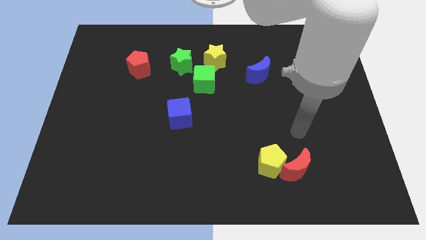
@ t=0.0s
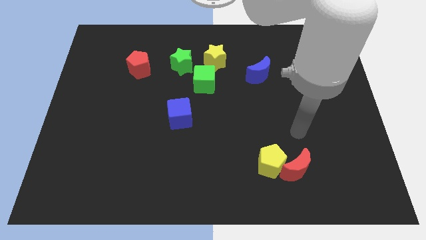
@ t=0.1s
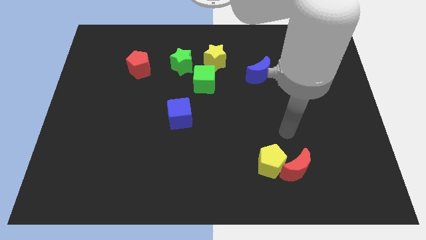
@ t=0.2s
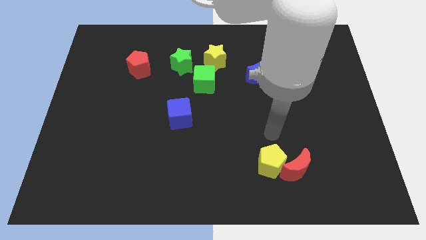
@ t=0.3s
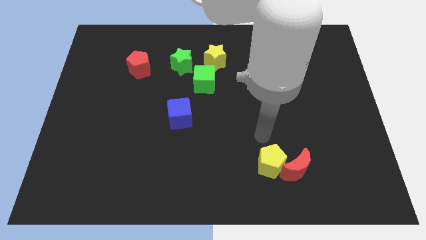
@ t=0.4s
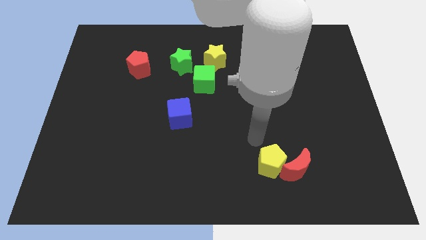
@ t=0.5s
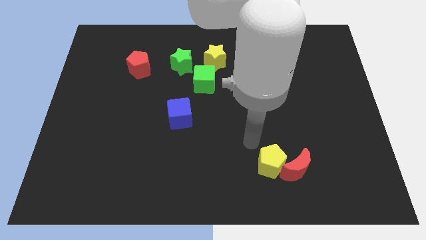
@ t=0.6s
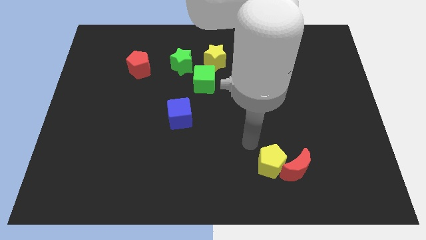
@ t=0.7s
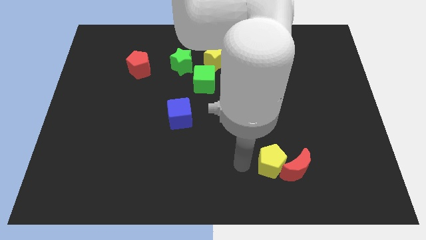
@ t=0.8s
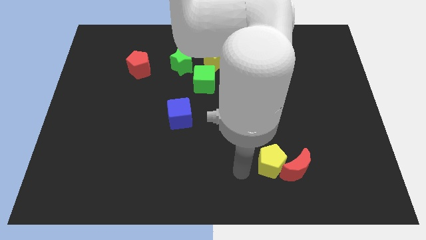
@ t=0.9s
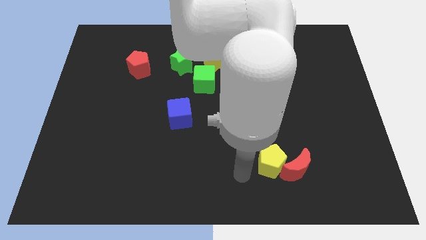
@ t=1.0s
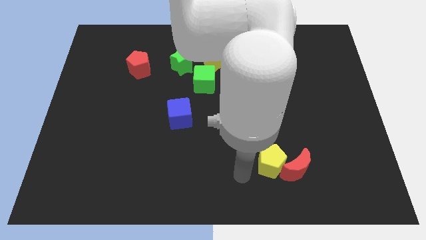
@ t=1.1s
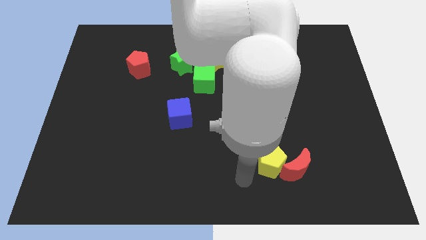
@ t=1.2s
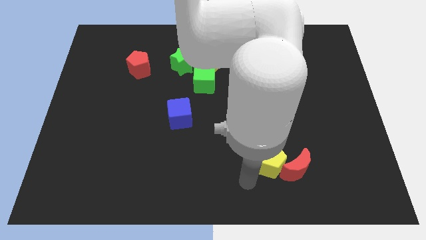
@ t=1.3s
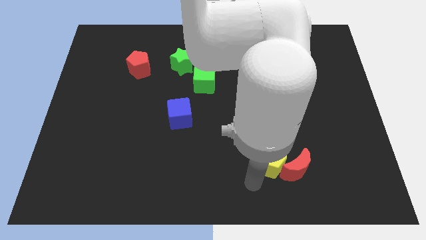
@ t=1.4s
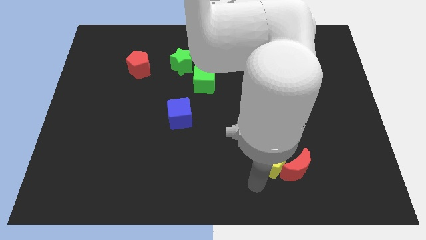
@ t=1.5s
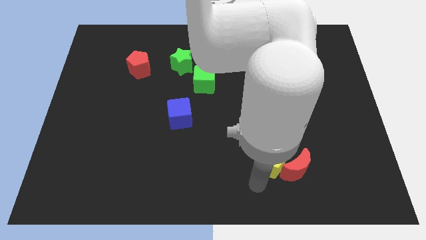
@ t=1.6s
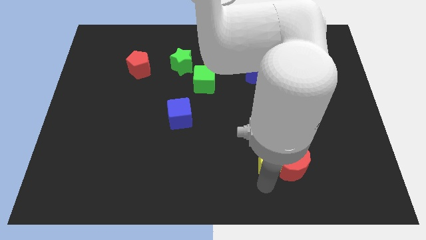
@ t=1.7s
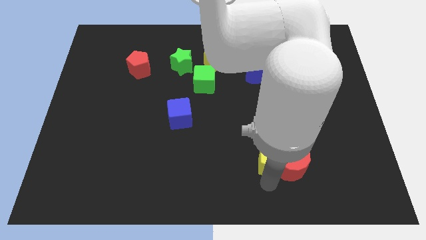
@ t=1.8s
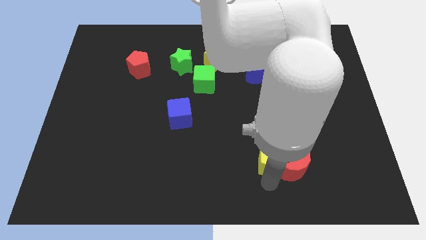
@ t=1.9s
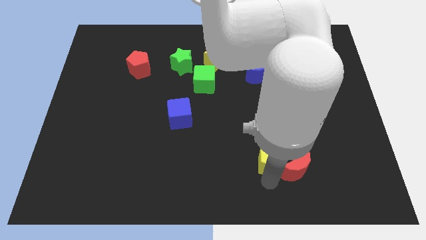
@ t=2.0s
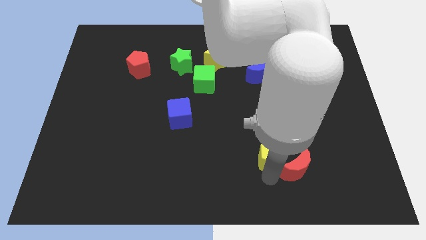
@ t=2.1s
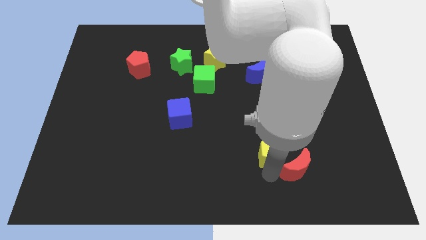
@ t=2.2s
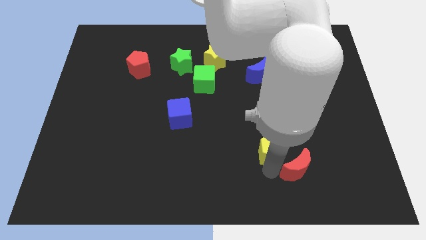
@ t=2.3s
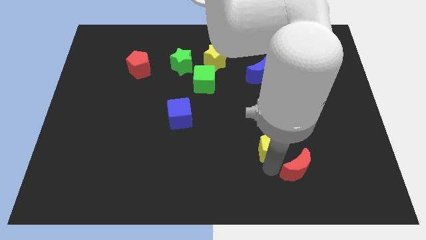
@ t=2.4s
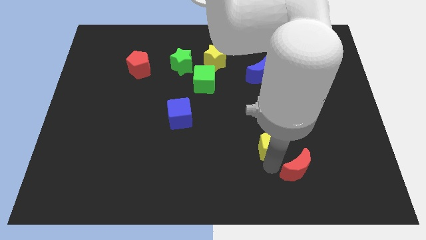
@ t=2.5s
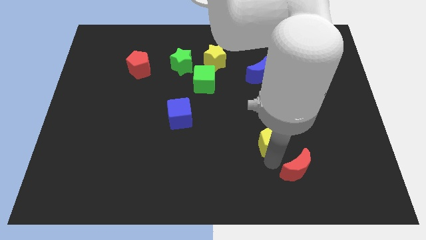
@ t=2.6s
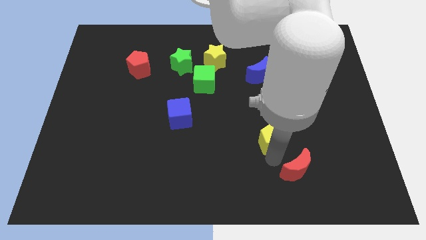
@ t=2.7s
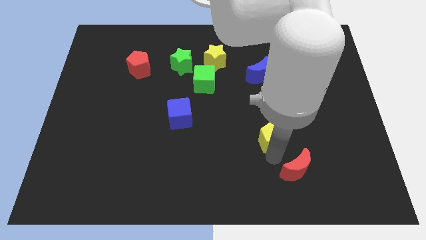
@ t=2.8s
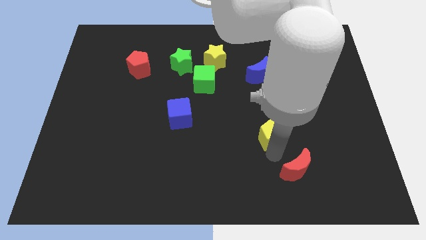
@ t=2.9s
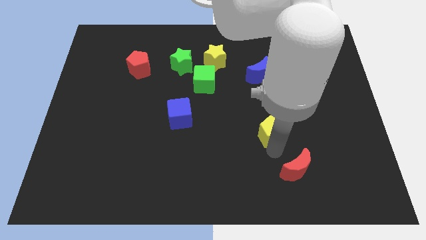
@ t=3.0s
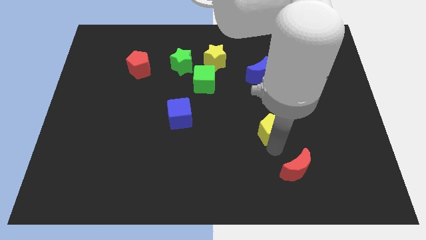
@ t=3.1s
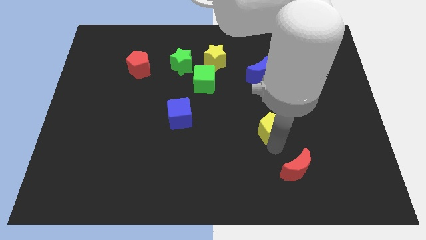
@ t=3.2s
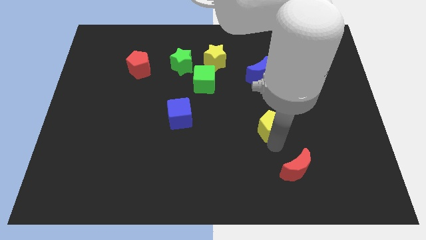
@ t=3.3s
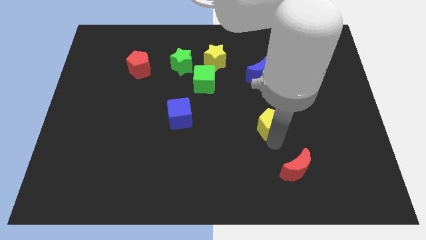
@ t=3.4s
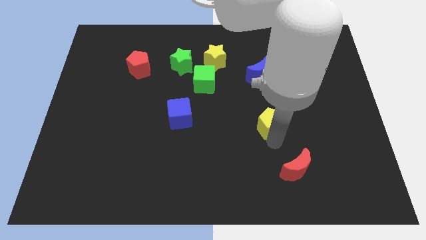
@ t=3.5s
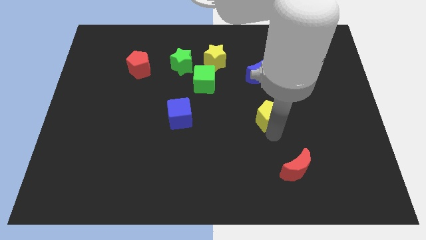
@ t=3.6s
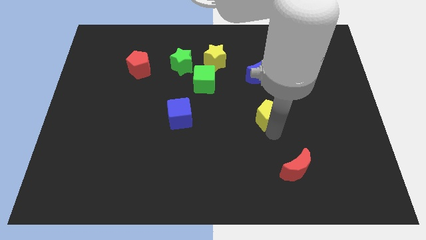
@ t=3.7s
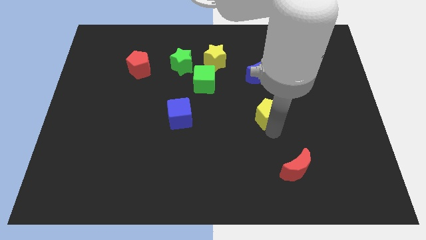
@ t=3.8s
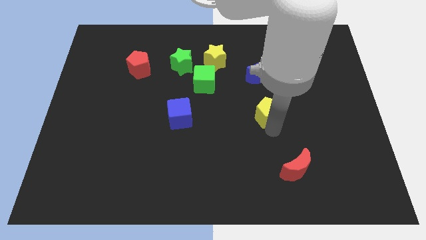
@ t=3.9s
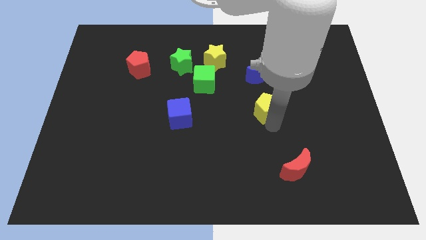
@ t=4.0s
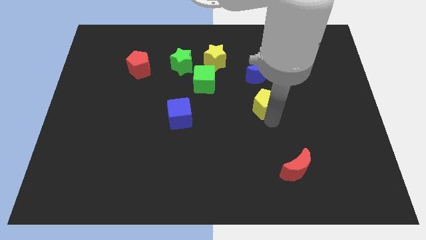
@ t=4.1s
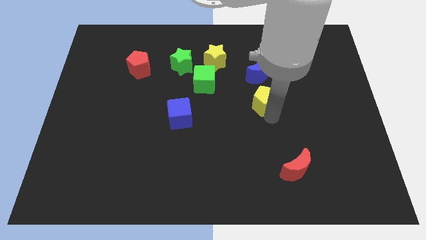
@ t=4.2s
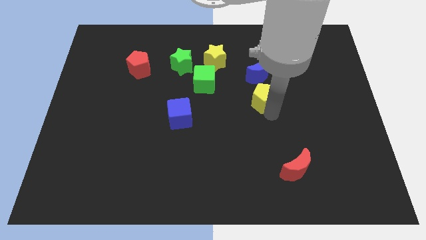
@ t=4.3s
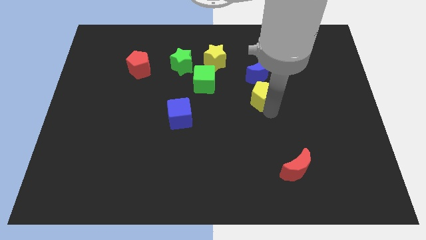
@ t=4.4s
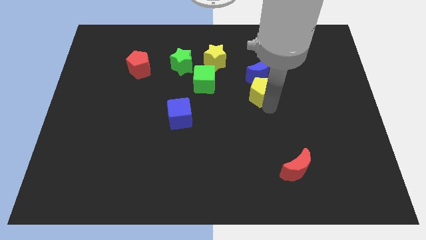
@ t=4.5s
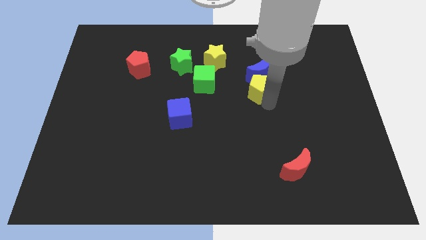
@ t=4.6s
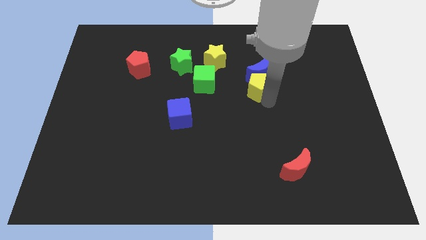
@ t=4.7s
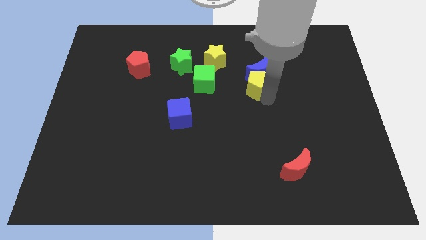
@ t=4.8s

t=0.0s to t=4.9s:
put the yellow pentagon towards the blue moon

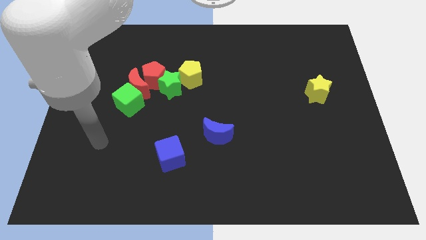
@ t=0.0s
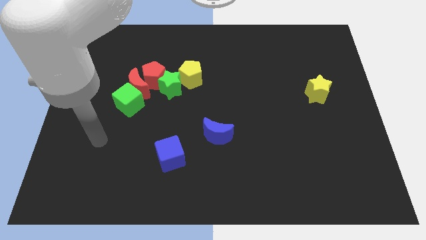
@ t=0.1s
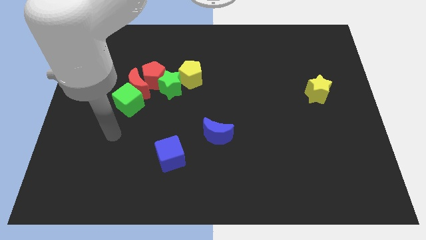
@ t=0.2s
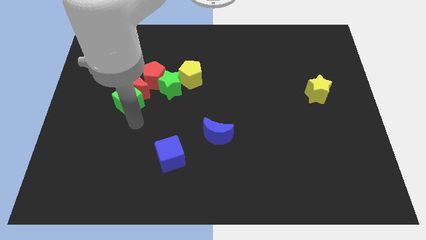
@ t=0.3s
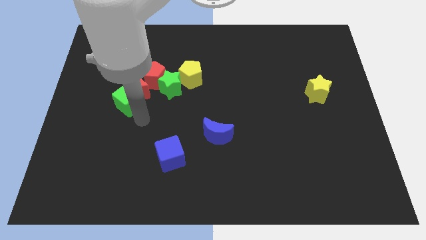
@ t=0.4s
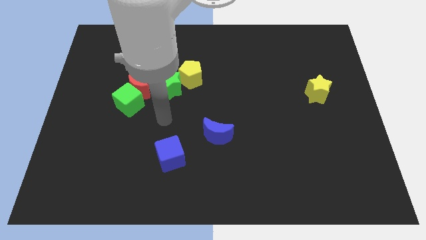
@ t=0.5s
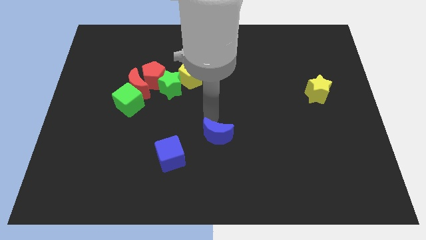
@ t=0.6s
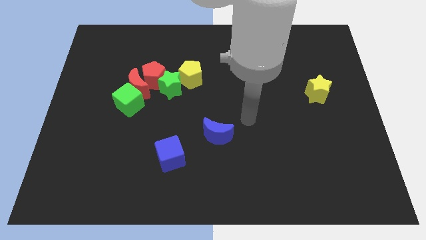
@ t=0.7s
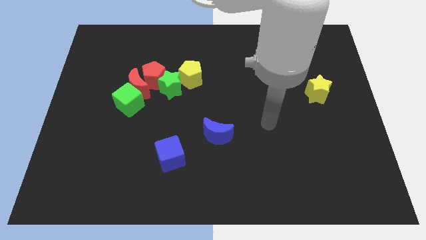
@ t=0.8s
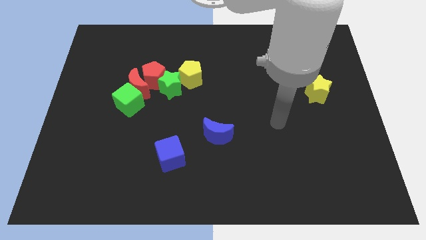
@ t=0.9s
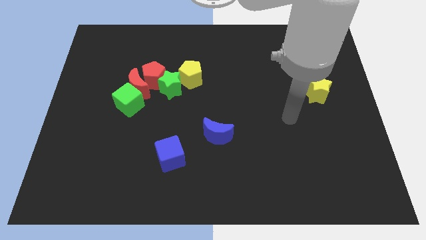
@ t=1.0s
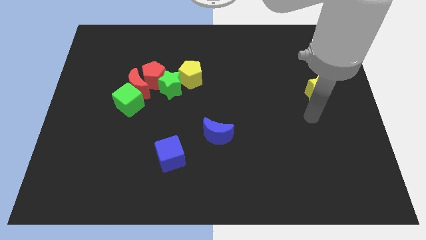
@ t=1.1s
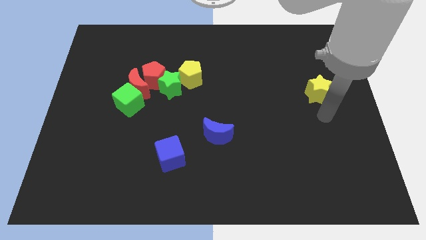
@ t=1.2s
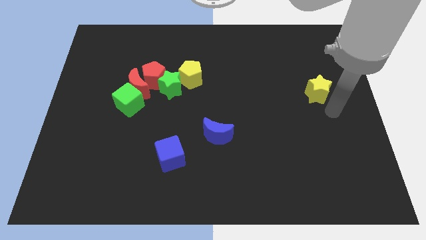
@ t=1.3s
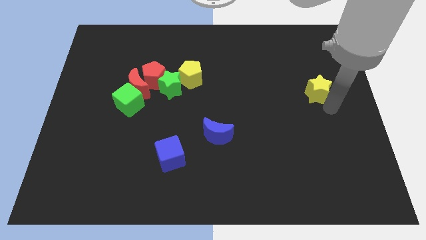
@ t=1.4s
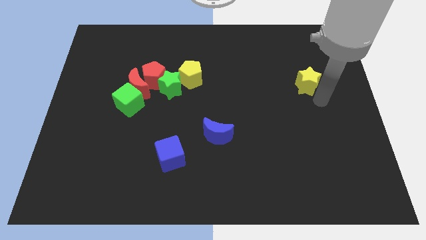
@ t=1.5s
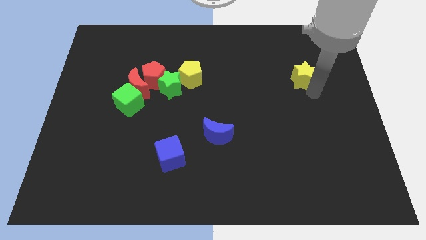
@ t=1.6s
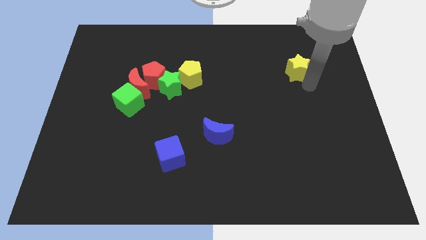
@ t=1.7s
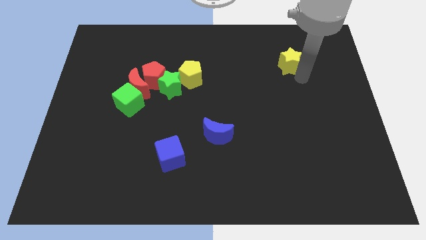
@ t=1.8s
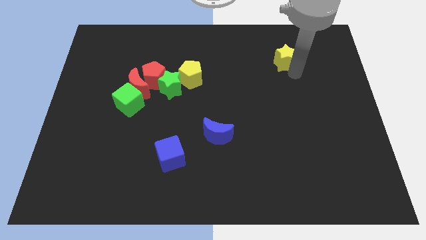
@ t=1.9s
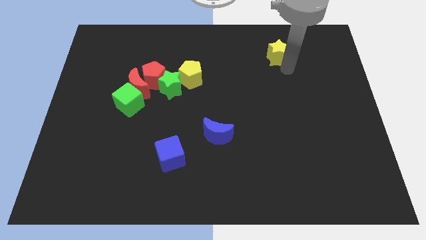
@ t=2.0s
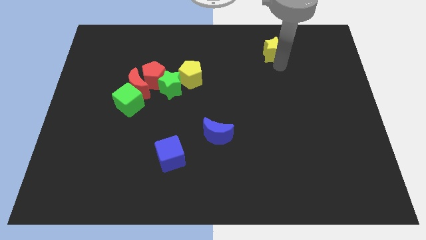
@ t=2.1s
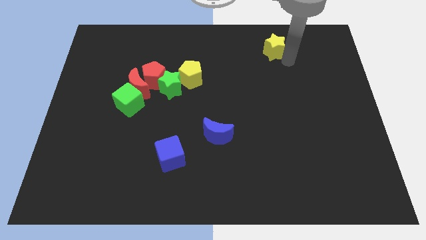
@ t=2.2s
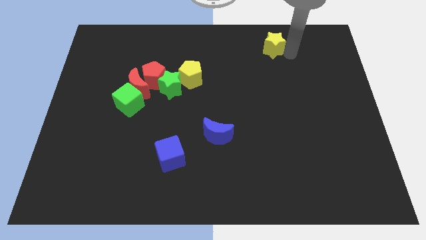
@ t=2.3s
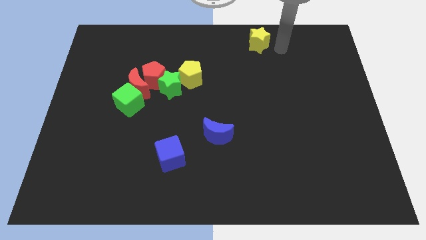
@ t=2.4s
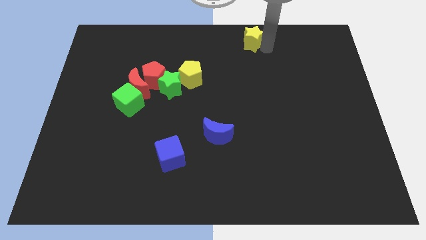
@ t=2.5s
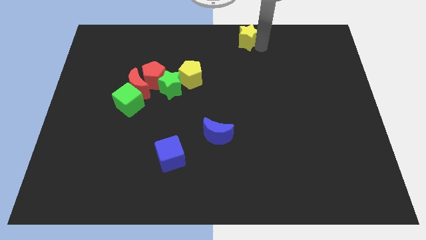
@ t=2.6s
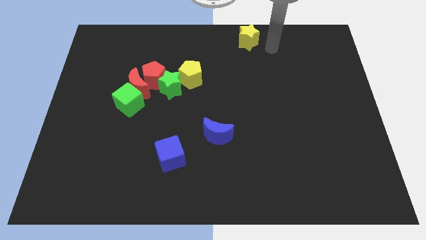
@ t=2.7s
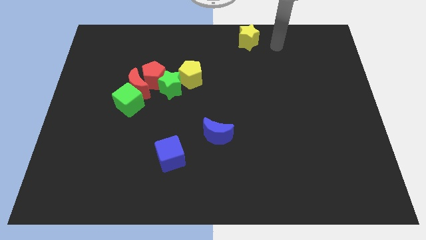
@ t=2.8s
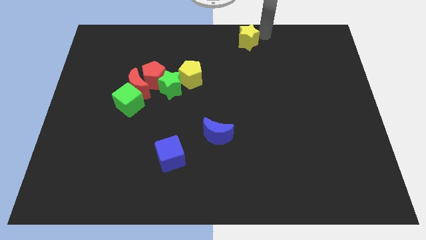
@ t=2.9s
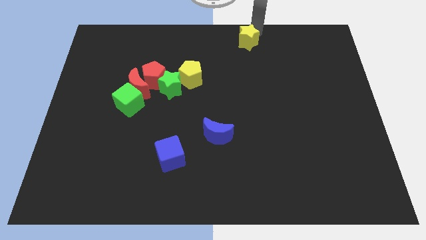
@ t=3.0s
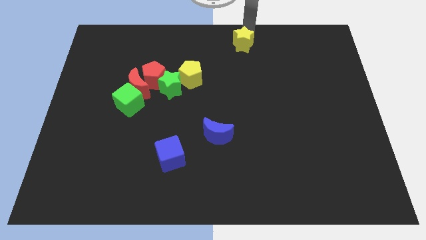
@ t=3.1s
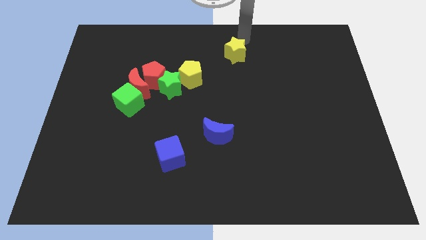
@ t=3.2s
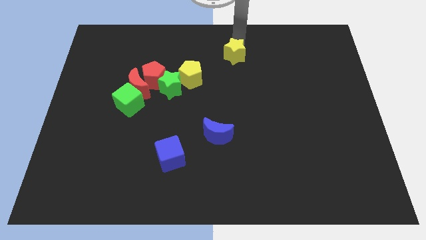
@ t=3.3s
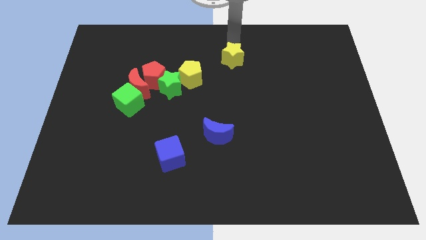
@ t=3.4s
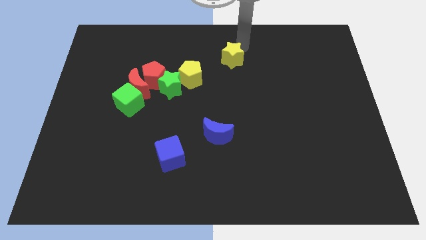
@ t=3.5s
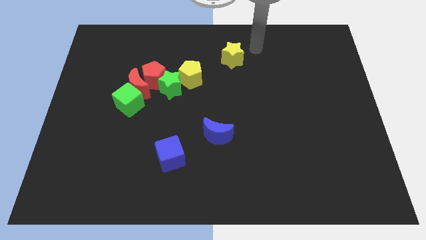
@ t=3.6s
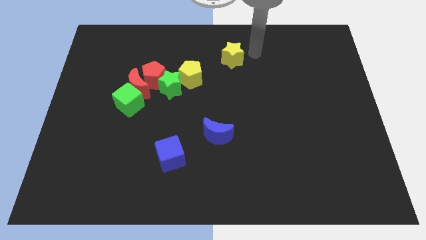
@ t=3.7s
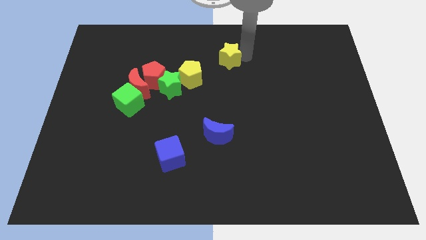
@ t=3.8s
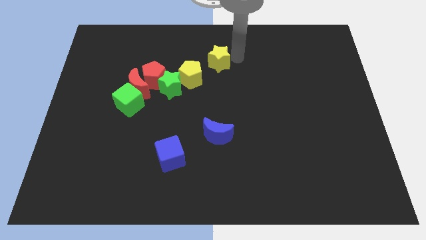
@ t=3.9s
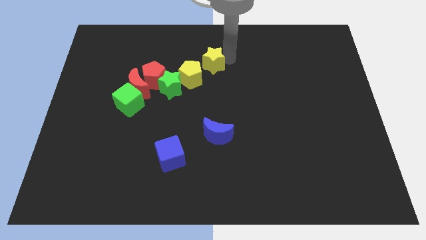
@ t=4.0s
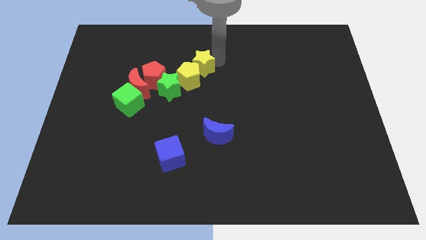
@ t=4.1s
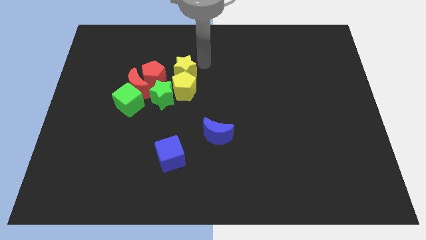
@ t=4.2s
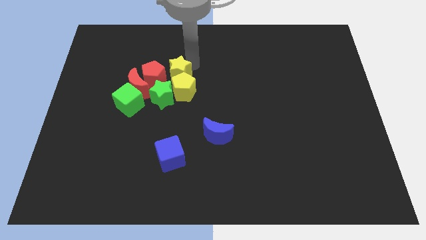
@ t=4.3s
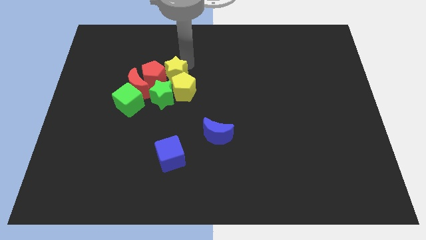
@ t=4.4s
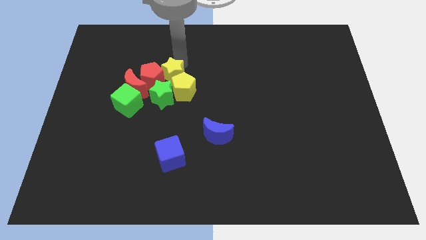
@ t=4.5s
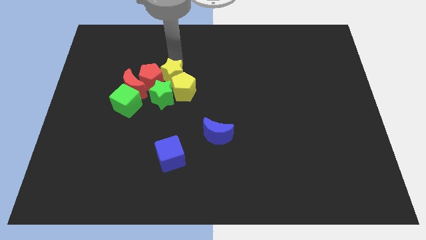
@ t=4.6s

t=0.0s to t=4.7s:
put the yellow star next to the red pentagon
